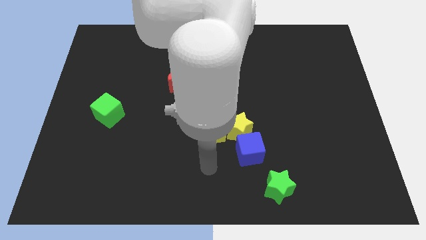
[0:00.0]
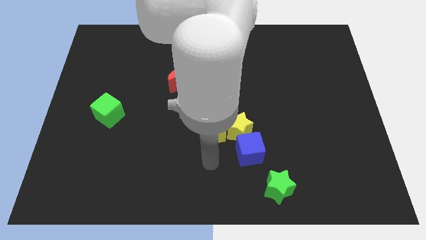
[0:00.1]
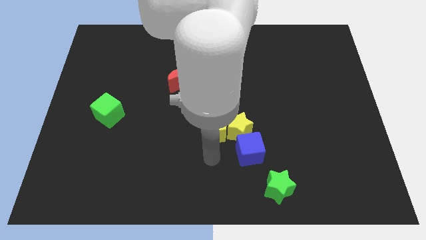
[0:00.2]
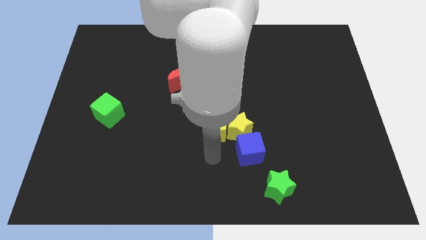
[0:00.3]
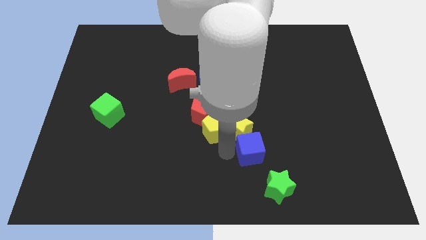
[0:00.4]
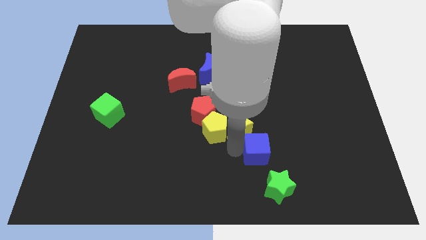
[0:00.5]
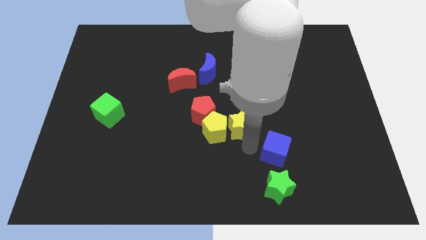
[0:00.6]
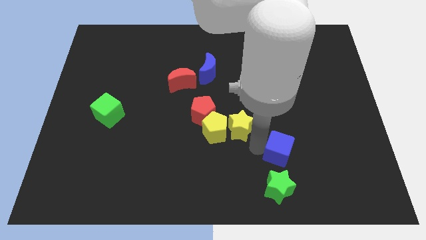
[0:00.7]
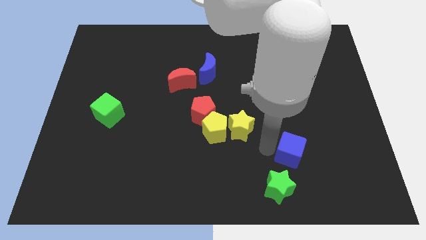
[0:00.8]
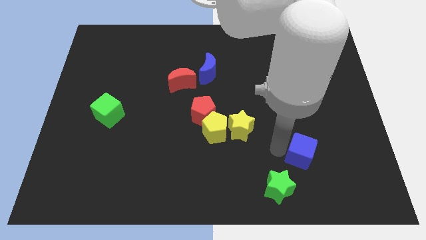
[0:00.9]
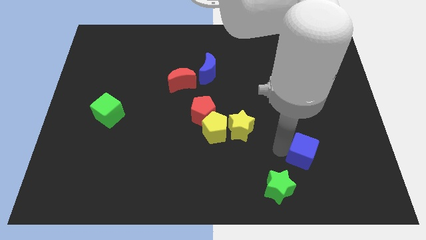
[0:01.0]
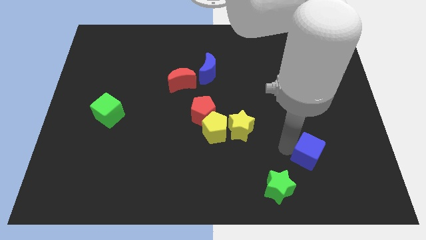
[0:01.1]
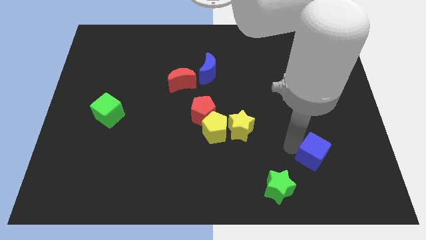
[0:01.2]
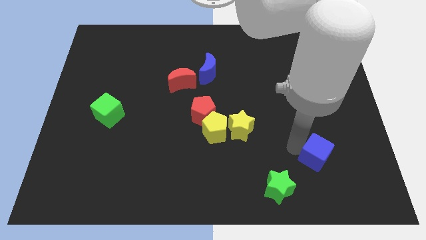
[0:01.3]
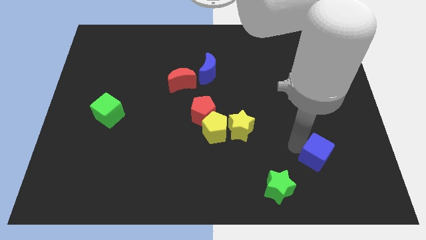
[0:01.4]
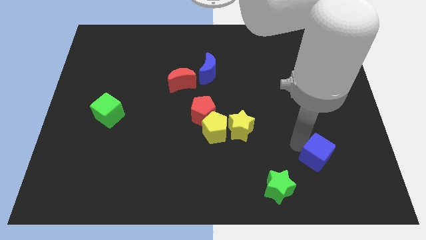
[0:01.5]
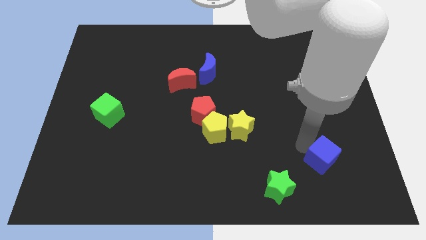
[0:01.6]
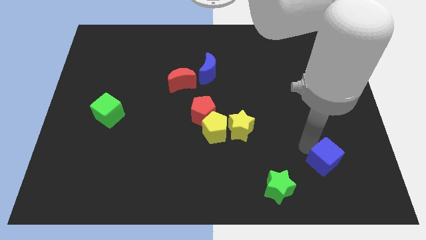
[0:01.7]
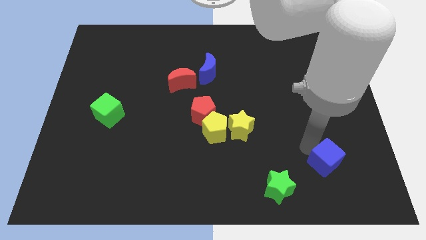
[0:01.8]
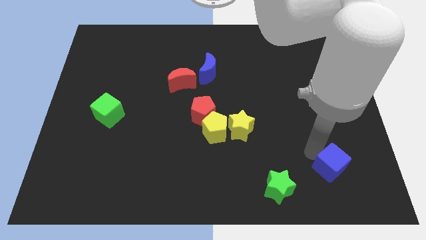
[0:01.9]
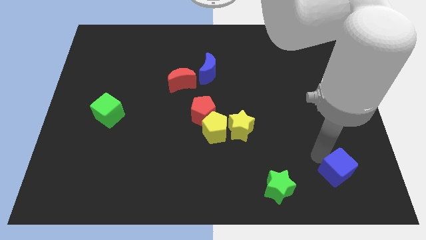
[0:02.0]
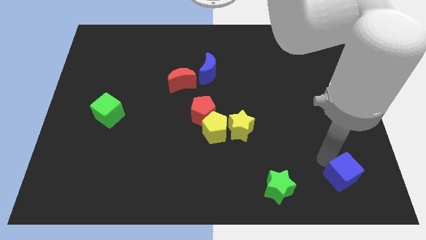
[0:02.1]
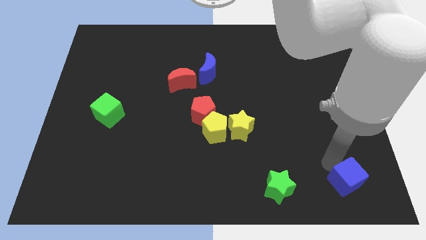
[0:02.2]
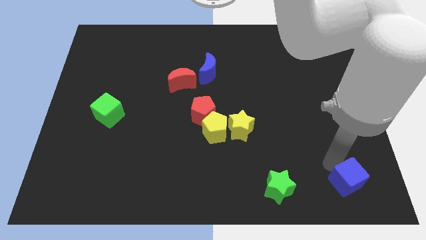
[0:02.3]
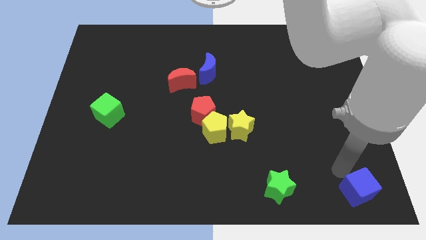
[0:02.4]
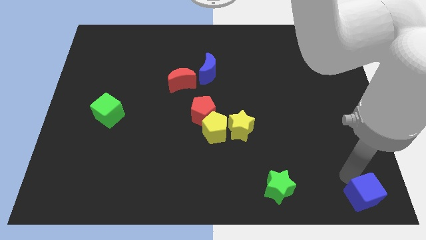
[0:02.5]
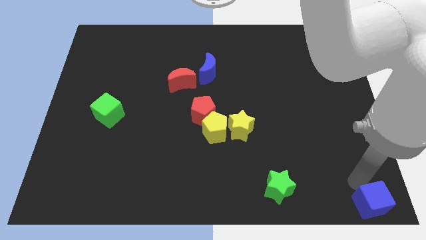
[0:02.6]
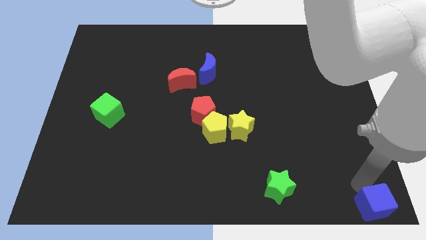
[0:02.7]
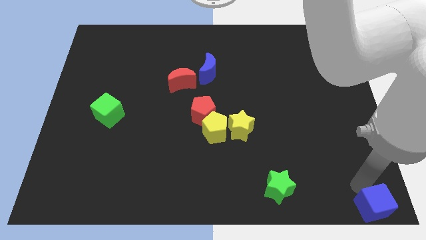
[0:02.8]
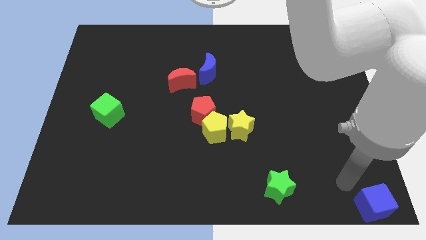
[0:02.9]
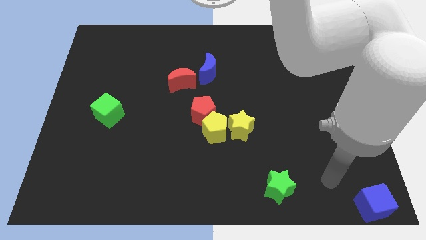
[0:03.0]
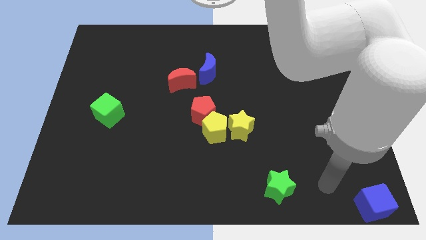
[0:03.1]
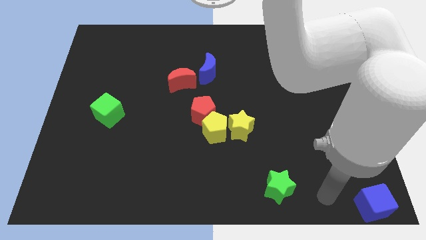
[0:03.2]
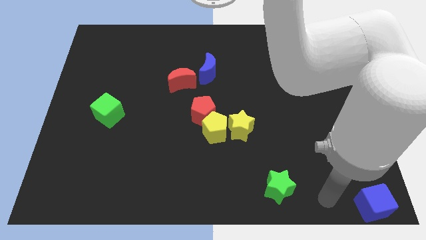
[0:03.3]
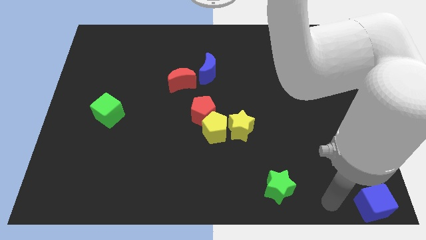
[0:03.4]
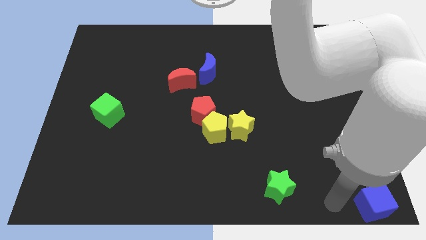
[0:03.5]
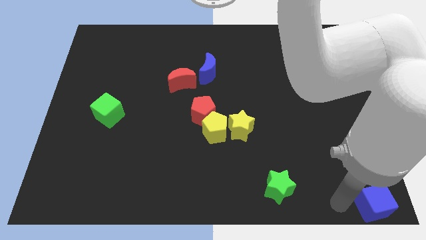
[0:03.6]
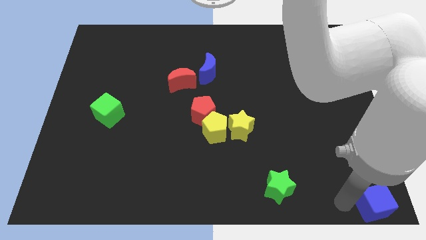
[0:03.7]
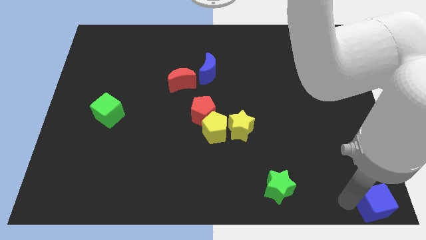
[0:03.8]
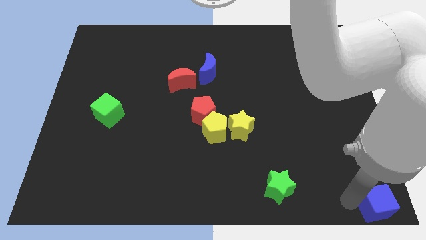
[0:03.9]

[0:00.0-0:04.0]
push blue cube to the bottom right corner of the board

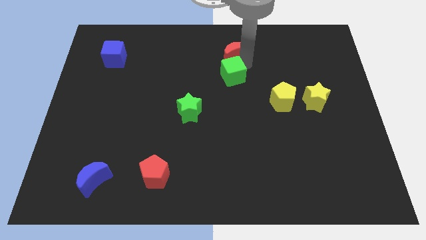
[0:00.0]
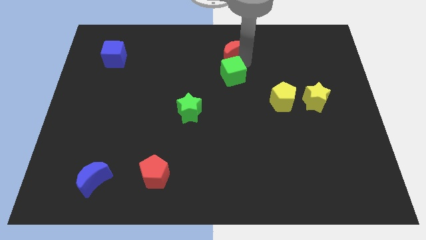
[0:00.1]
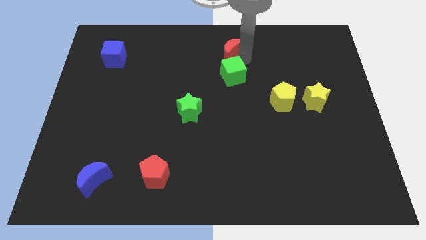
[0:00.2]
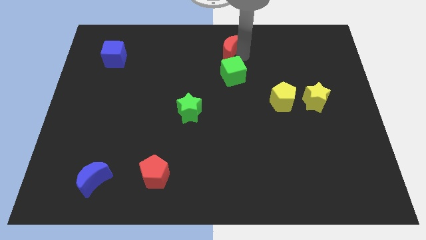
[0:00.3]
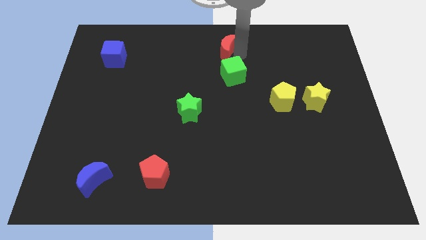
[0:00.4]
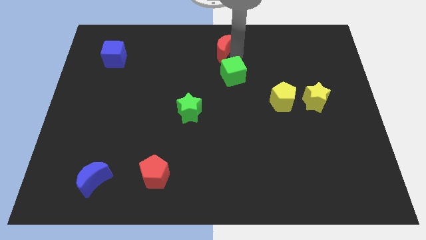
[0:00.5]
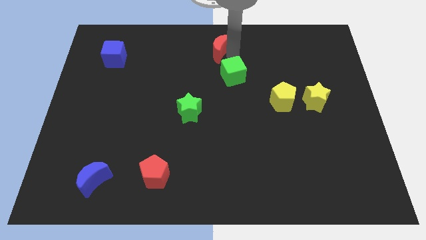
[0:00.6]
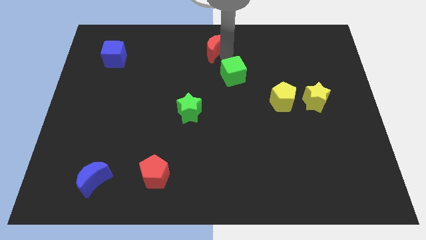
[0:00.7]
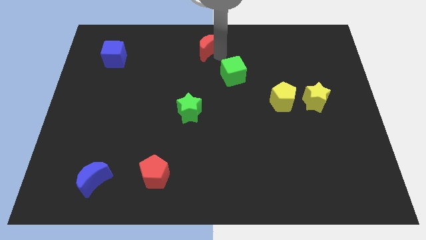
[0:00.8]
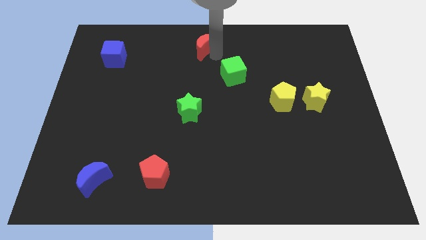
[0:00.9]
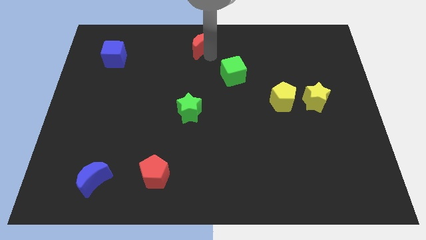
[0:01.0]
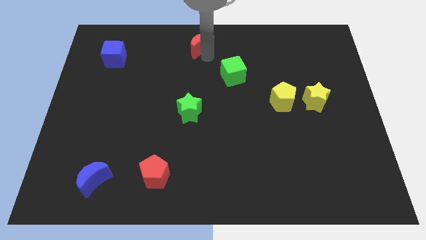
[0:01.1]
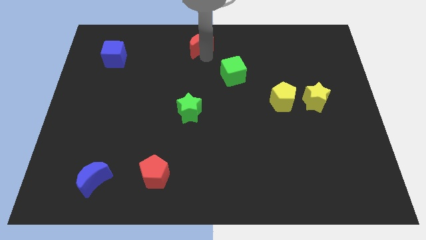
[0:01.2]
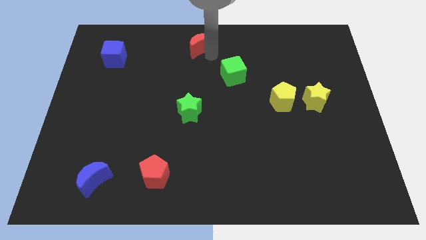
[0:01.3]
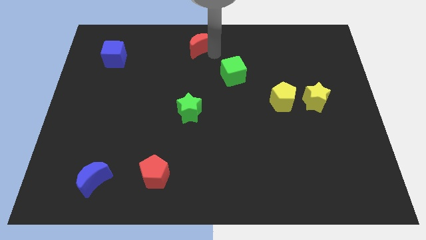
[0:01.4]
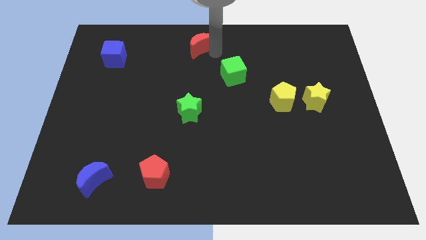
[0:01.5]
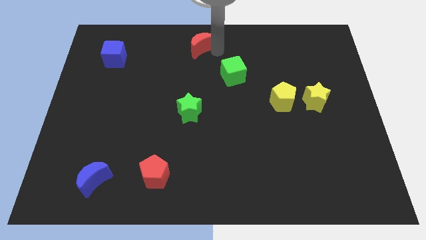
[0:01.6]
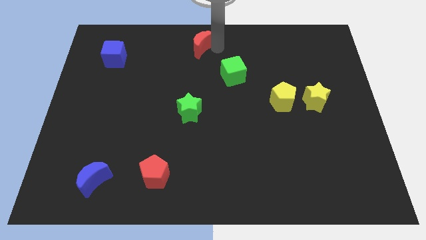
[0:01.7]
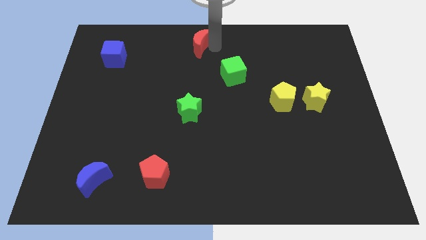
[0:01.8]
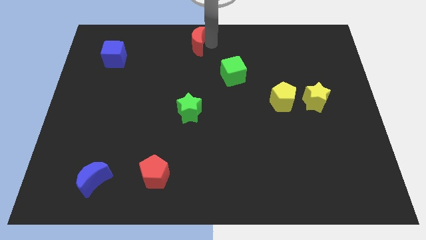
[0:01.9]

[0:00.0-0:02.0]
separate the red crescent from the green cube

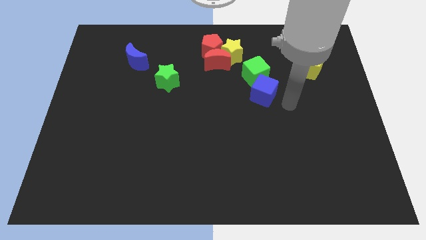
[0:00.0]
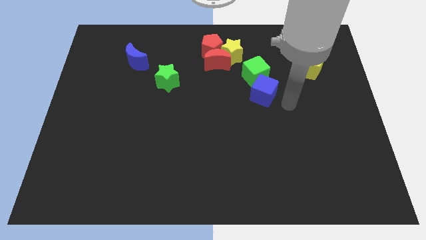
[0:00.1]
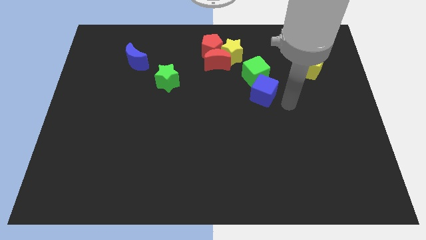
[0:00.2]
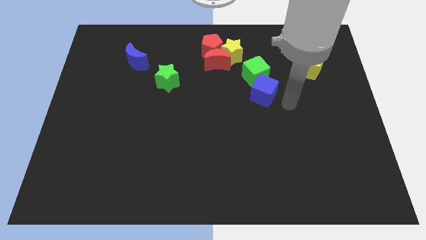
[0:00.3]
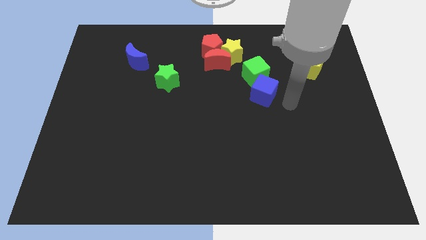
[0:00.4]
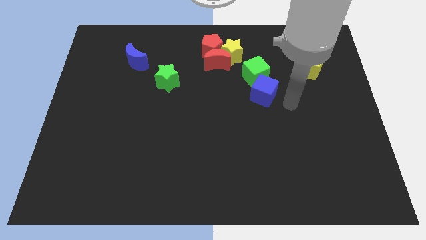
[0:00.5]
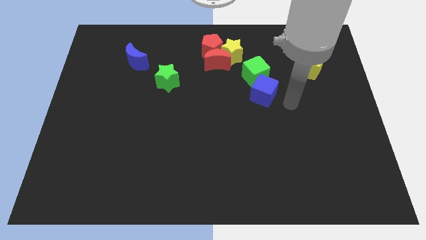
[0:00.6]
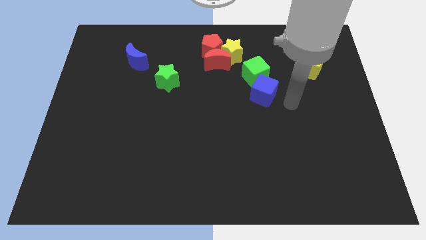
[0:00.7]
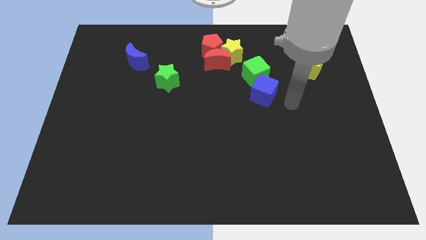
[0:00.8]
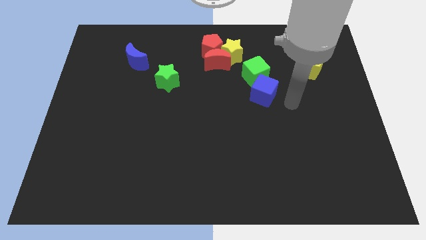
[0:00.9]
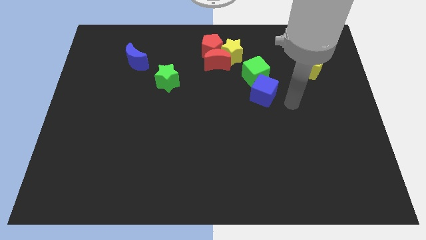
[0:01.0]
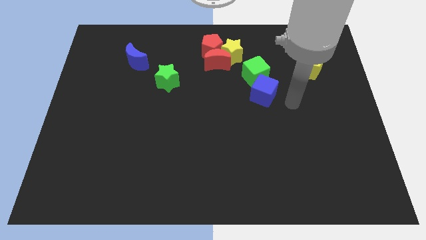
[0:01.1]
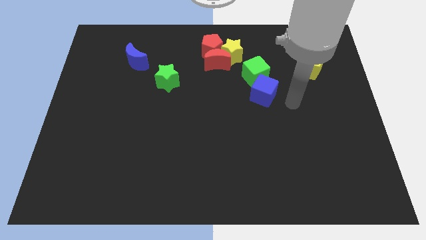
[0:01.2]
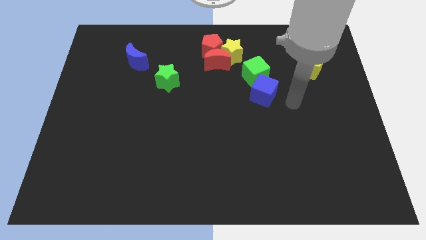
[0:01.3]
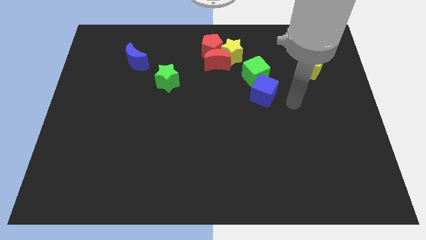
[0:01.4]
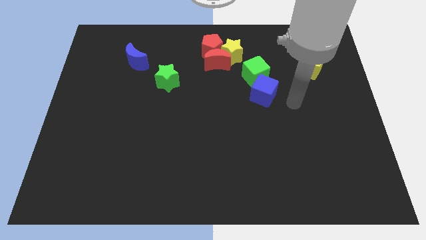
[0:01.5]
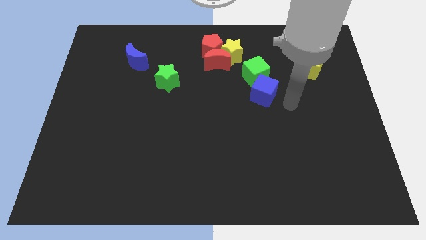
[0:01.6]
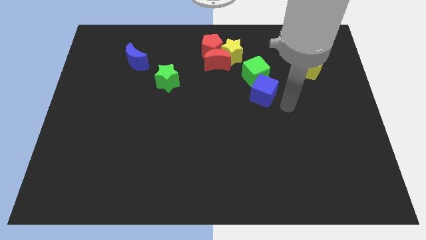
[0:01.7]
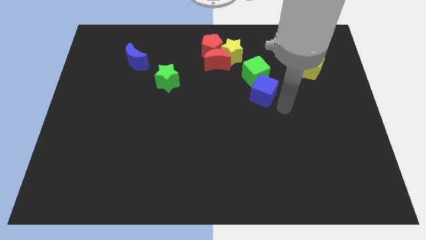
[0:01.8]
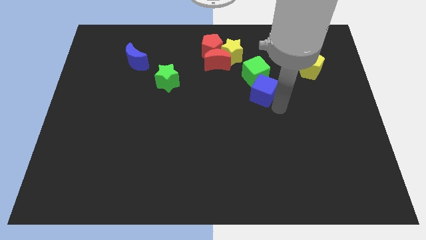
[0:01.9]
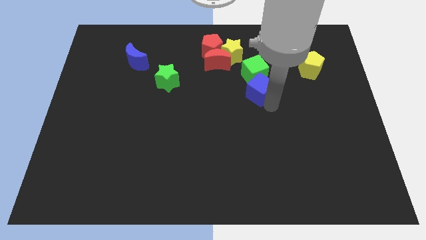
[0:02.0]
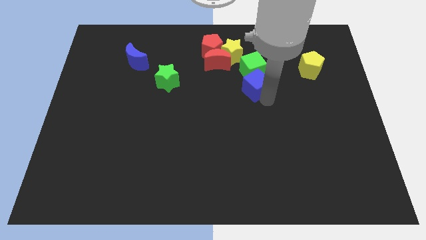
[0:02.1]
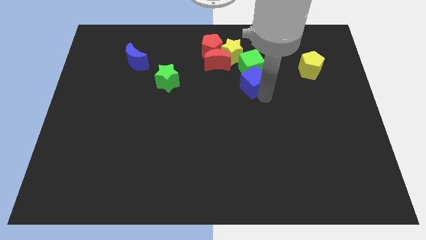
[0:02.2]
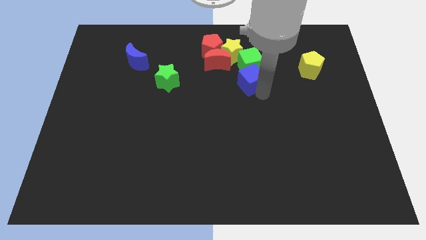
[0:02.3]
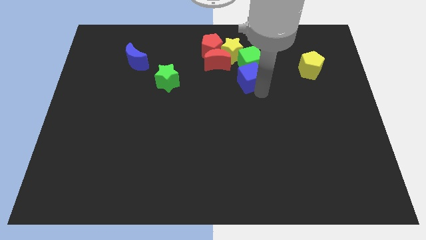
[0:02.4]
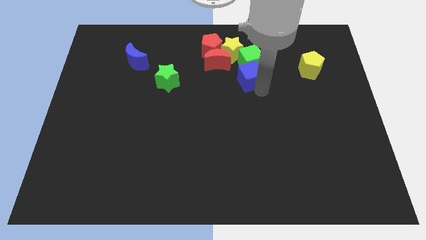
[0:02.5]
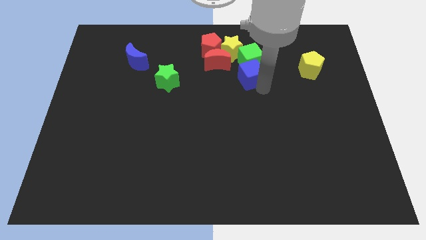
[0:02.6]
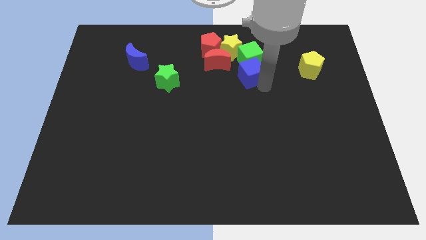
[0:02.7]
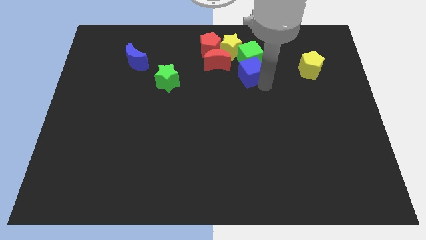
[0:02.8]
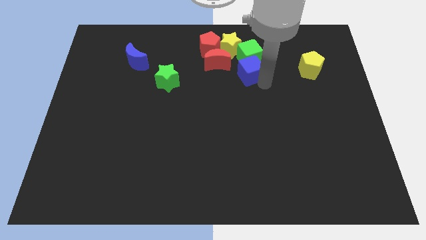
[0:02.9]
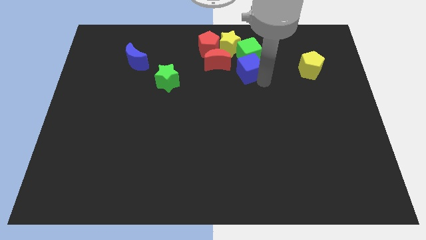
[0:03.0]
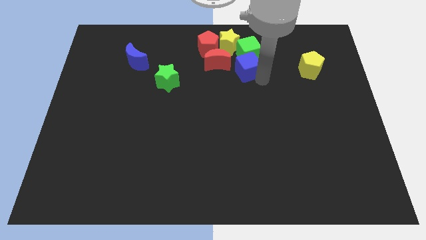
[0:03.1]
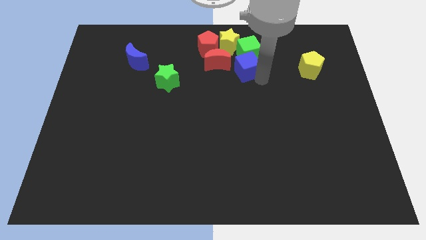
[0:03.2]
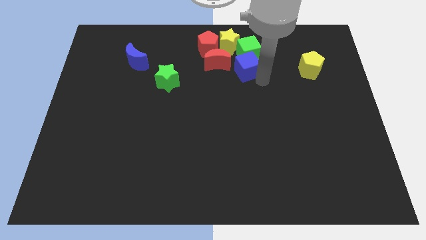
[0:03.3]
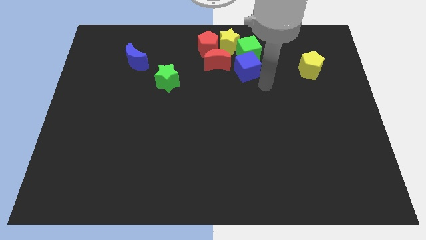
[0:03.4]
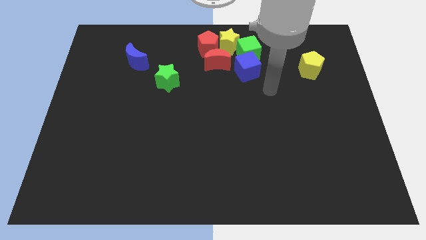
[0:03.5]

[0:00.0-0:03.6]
add both the cubes to the group of blocks at the top center of the board
